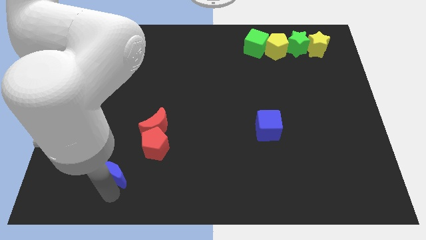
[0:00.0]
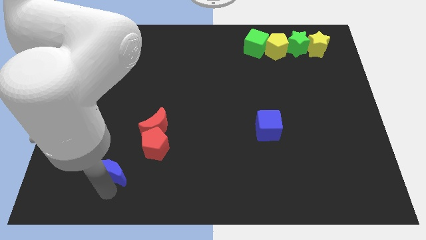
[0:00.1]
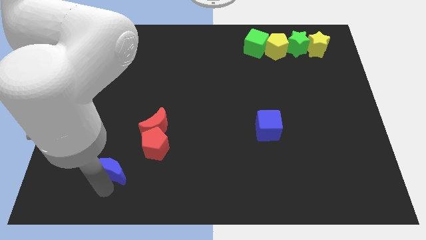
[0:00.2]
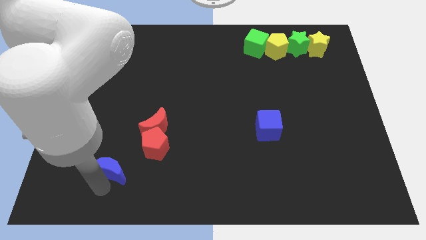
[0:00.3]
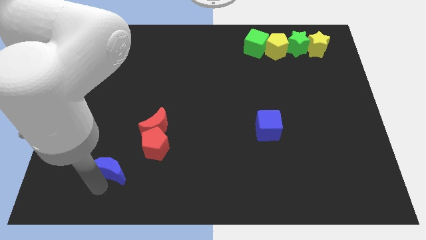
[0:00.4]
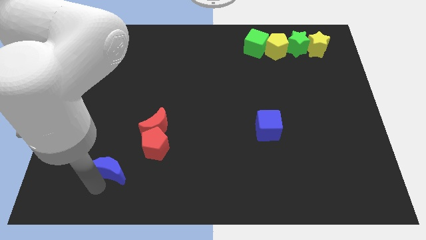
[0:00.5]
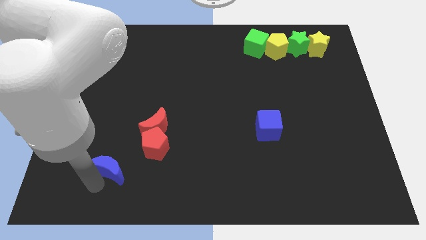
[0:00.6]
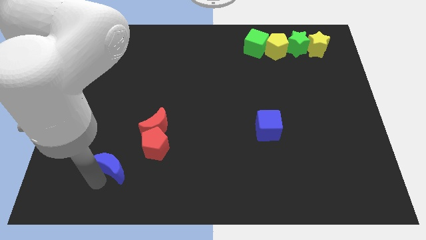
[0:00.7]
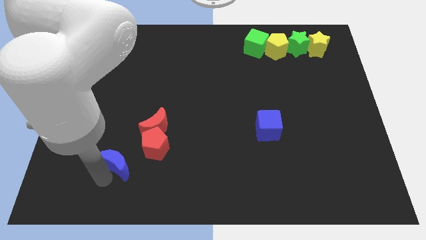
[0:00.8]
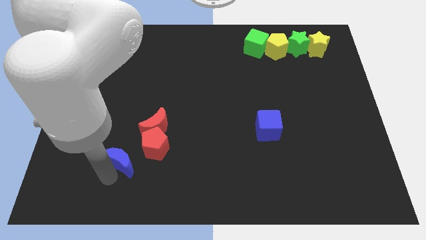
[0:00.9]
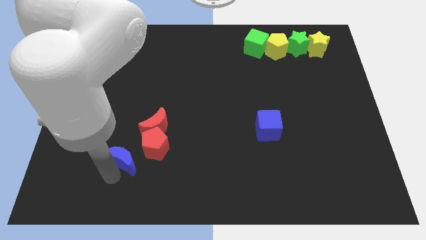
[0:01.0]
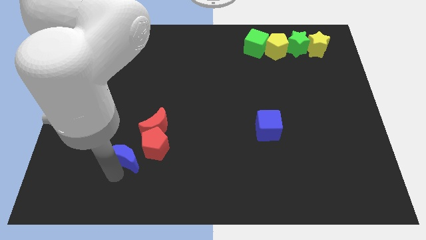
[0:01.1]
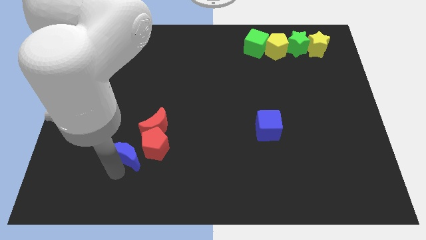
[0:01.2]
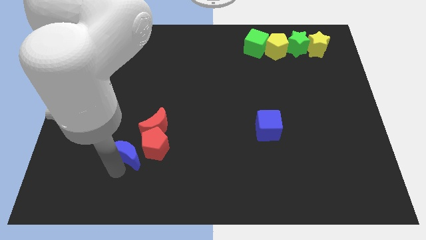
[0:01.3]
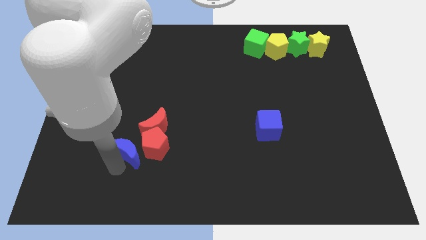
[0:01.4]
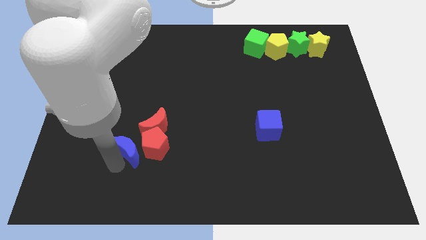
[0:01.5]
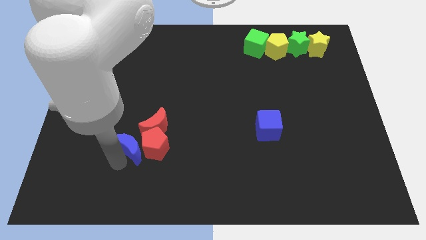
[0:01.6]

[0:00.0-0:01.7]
place blue moon to the left of red pentagon

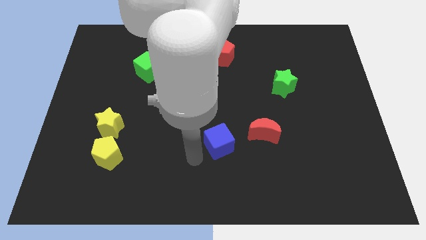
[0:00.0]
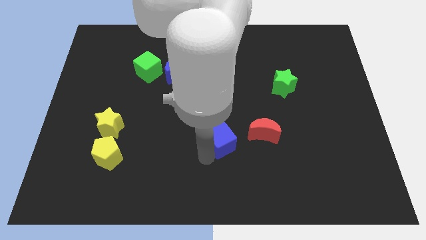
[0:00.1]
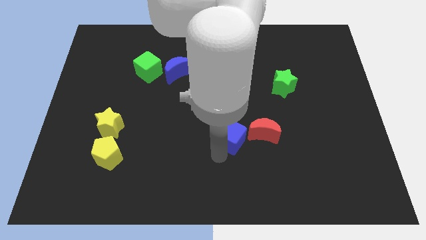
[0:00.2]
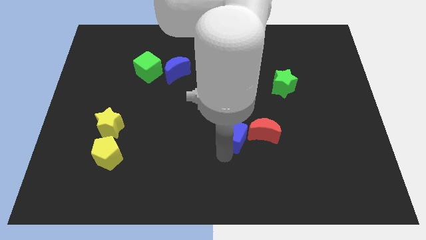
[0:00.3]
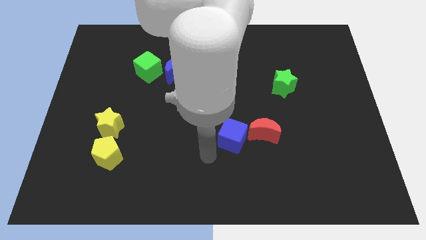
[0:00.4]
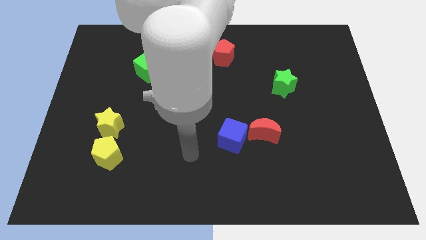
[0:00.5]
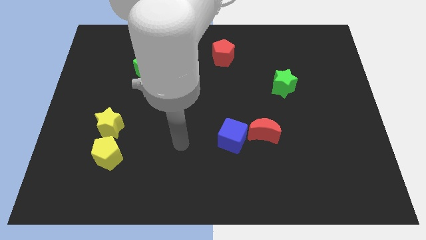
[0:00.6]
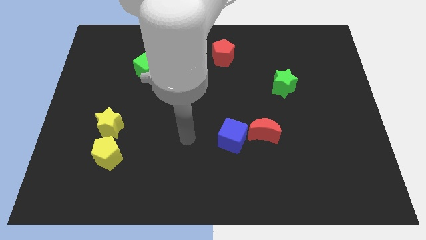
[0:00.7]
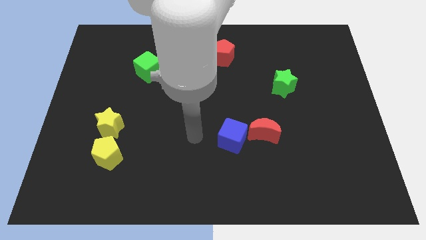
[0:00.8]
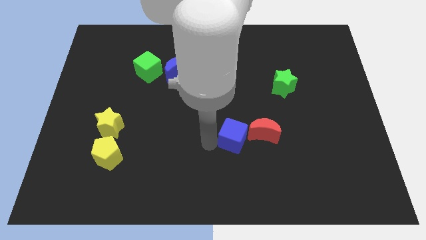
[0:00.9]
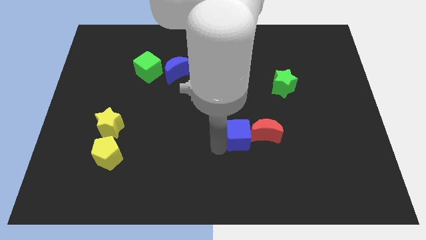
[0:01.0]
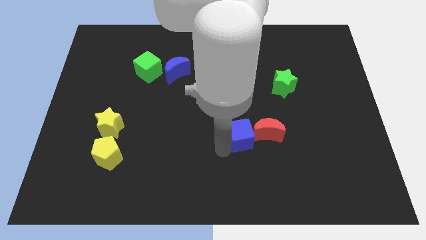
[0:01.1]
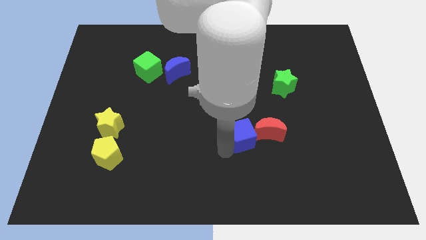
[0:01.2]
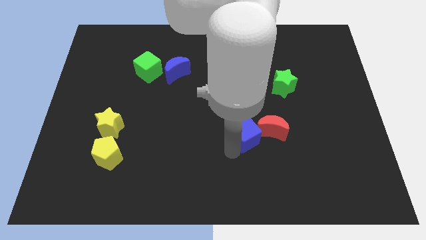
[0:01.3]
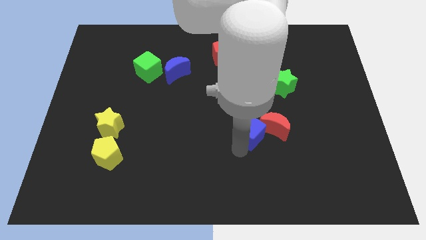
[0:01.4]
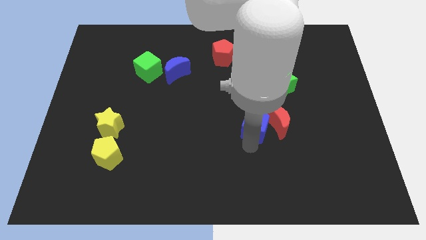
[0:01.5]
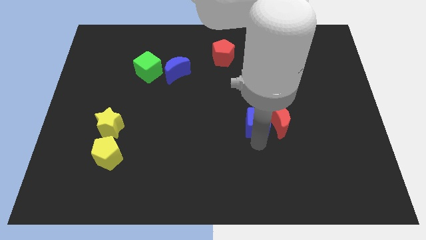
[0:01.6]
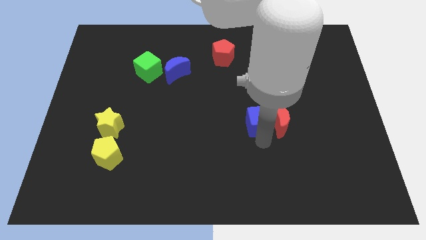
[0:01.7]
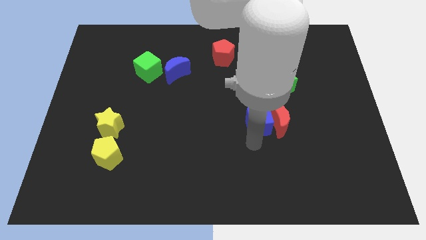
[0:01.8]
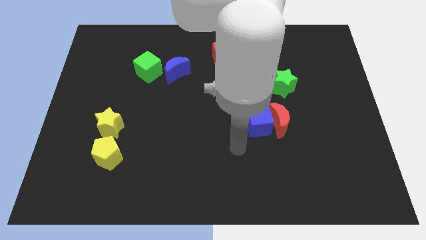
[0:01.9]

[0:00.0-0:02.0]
push the blue cube into the red moon

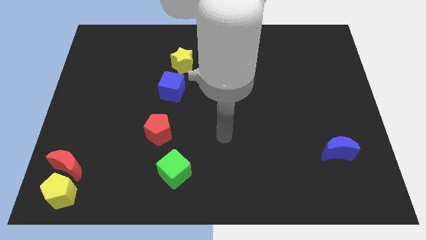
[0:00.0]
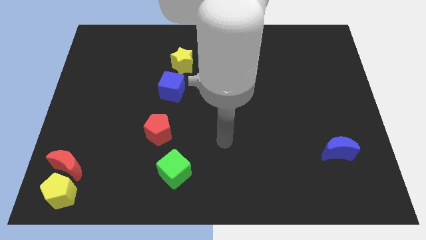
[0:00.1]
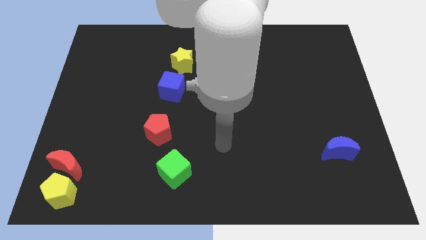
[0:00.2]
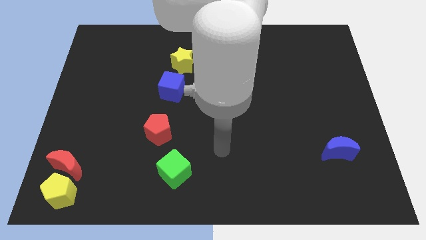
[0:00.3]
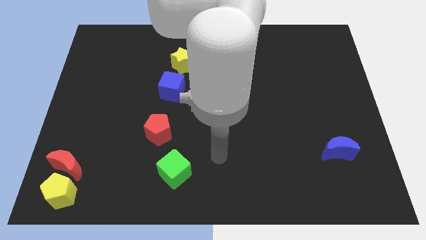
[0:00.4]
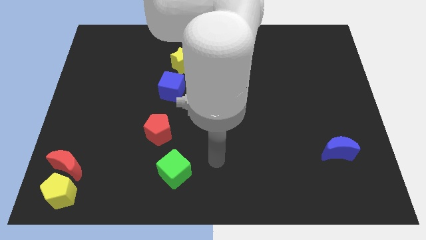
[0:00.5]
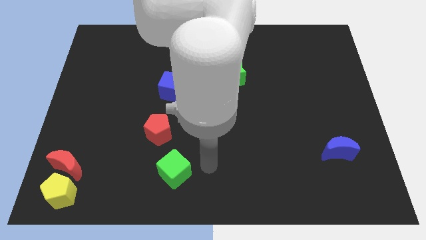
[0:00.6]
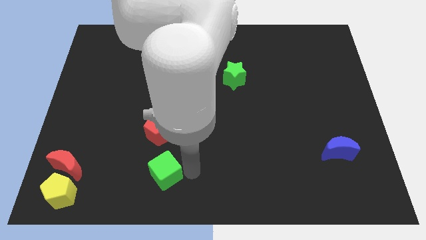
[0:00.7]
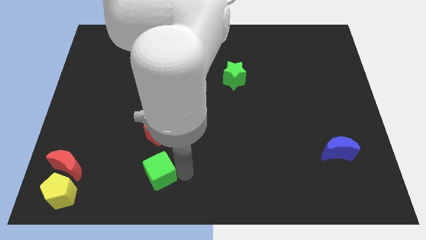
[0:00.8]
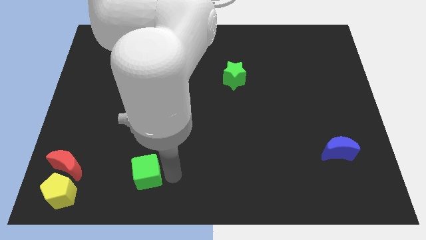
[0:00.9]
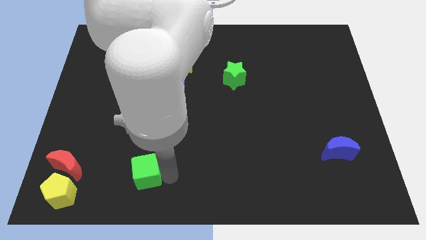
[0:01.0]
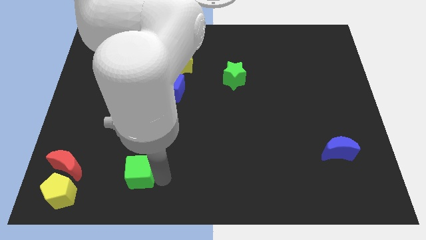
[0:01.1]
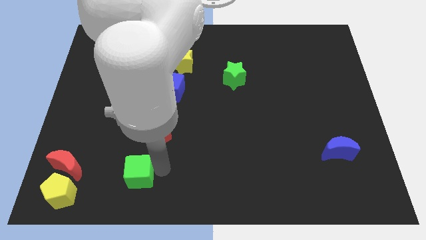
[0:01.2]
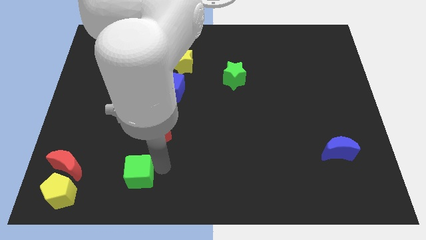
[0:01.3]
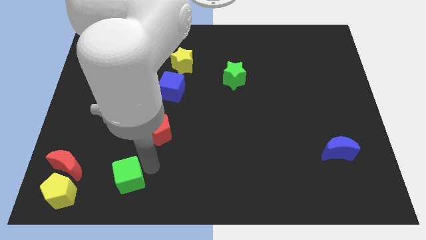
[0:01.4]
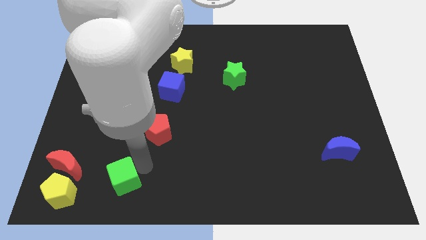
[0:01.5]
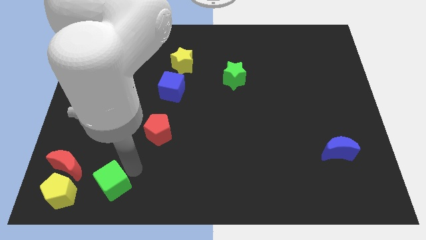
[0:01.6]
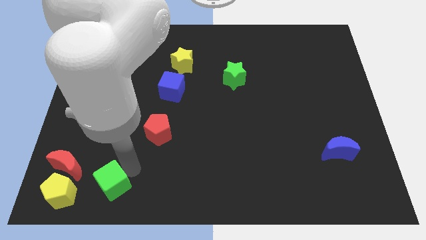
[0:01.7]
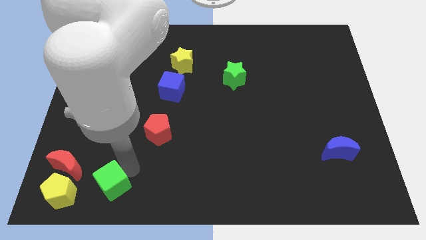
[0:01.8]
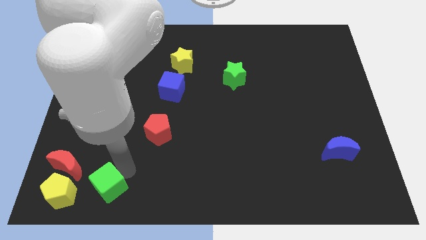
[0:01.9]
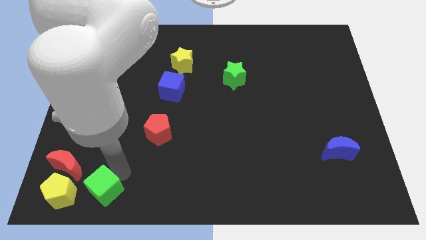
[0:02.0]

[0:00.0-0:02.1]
move the green cube to the right of yellow pentagon

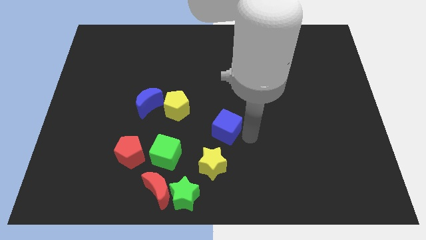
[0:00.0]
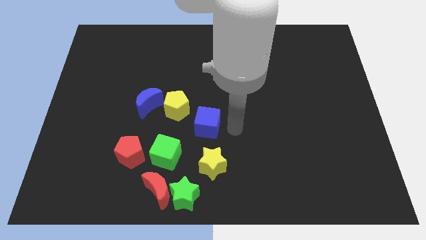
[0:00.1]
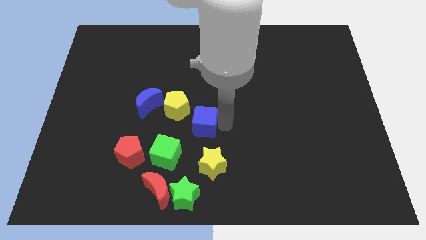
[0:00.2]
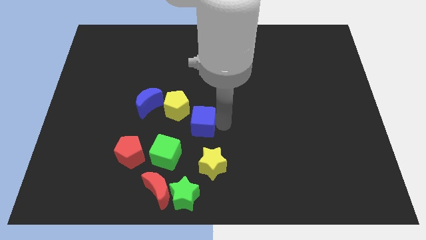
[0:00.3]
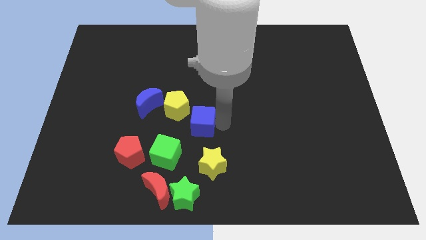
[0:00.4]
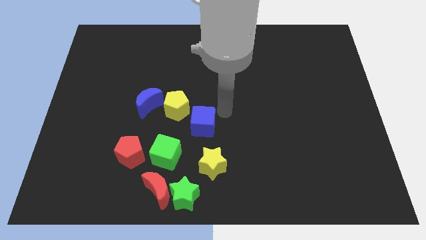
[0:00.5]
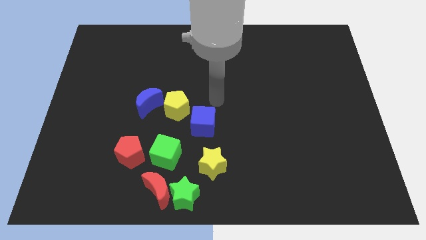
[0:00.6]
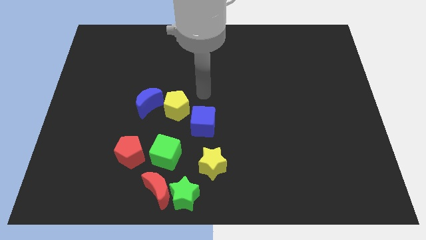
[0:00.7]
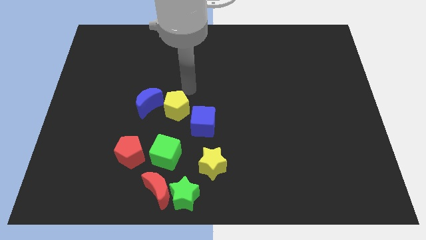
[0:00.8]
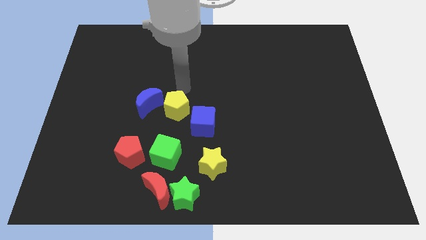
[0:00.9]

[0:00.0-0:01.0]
place arm above the yellow pentagon

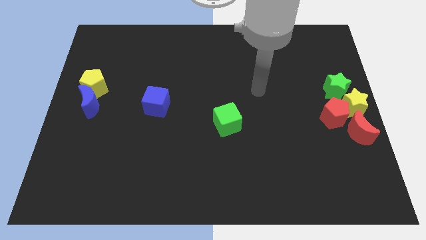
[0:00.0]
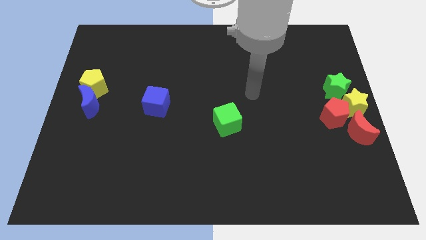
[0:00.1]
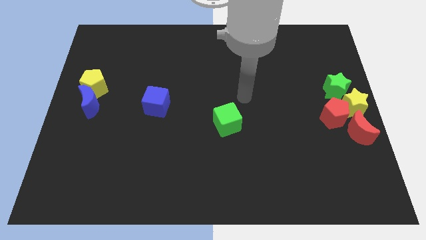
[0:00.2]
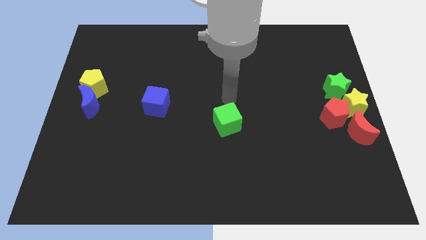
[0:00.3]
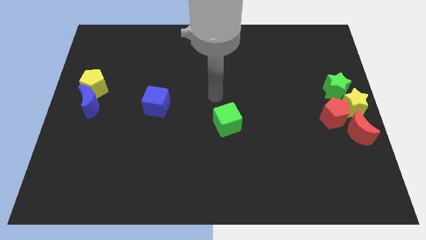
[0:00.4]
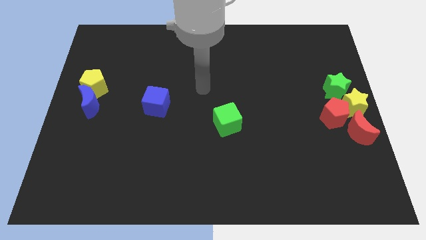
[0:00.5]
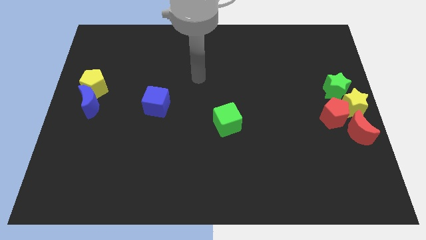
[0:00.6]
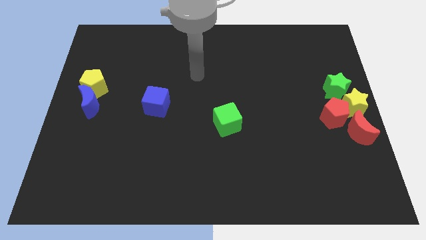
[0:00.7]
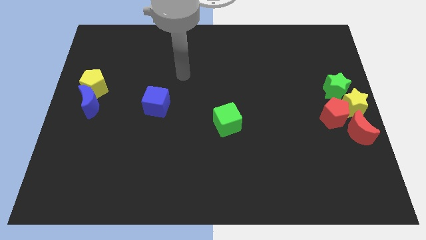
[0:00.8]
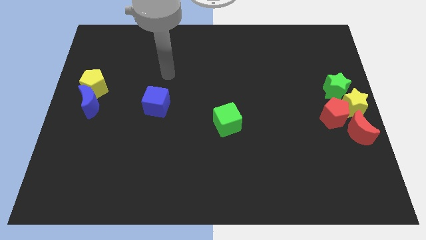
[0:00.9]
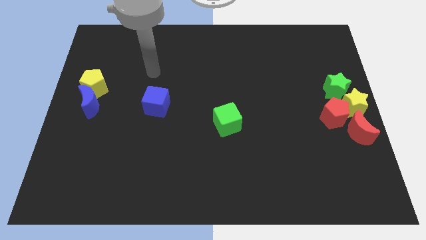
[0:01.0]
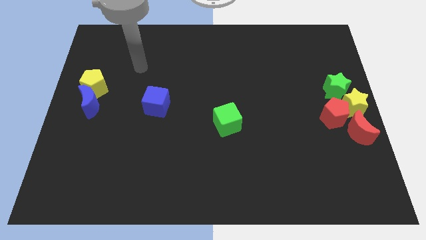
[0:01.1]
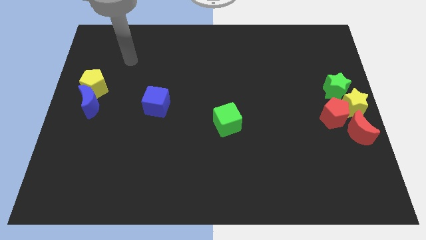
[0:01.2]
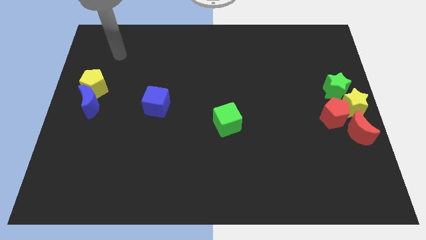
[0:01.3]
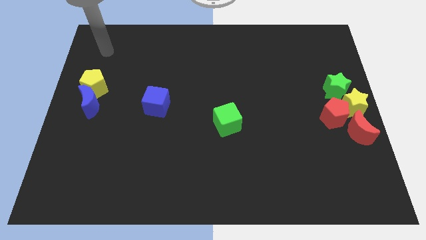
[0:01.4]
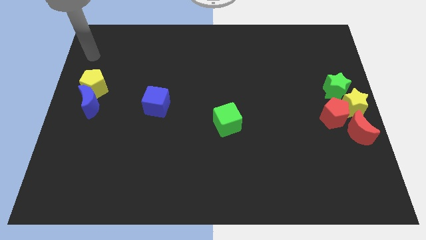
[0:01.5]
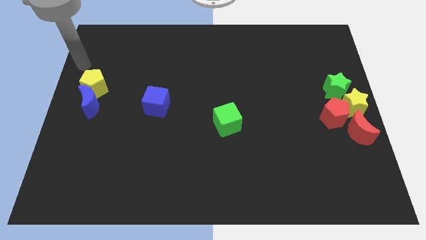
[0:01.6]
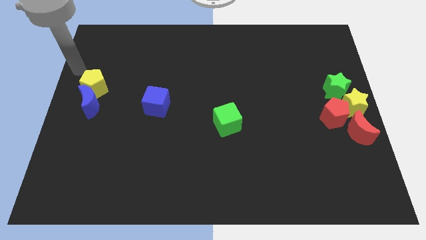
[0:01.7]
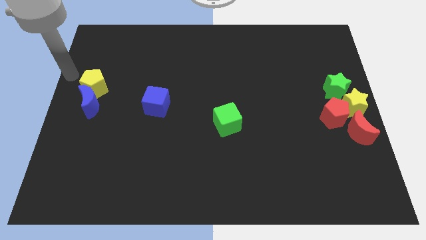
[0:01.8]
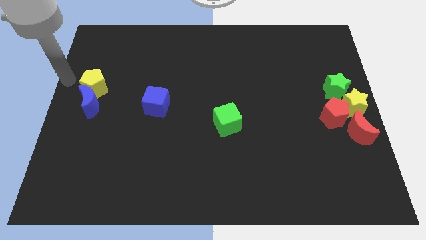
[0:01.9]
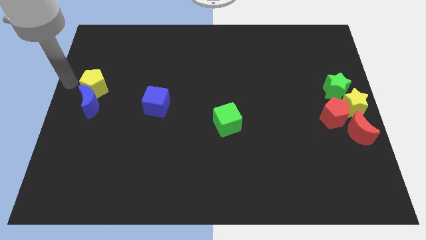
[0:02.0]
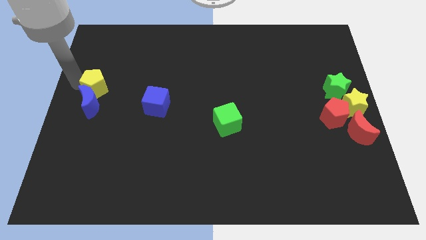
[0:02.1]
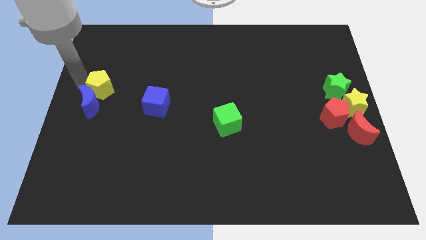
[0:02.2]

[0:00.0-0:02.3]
point at the left side of the yellow pentagon
